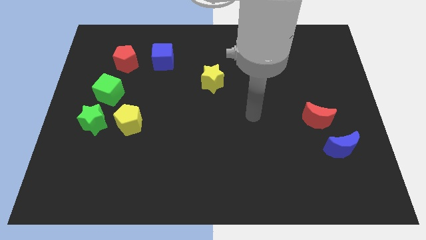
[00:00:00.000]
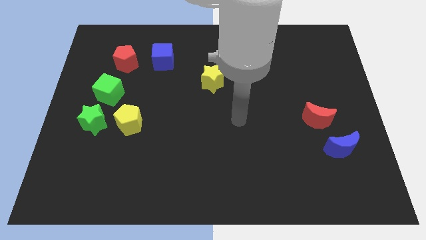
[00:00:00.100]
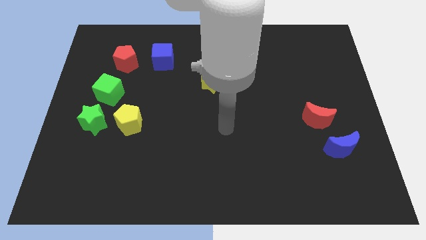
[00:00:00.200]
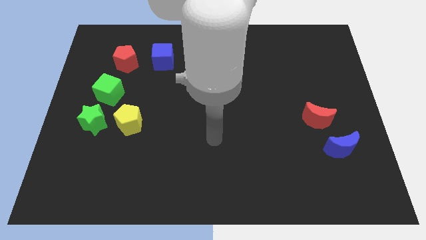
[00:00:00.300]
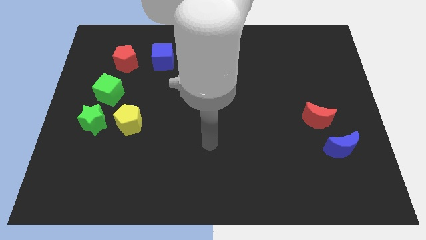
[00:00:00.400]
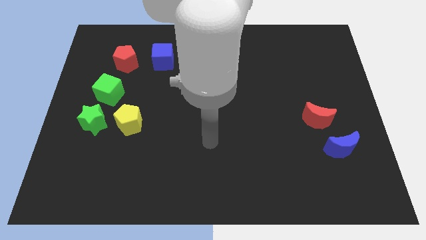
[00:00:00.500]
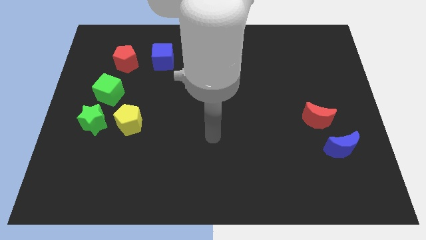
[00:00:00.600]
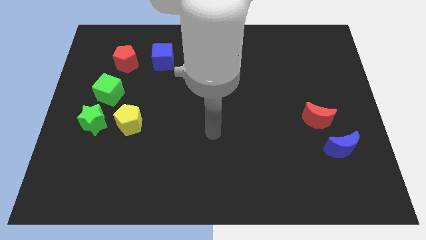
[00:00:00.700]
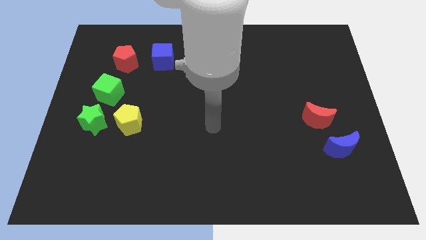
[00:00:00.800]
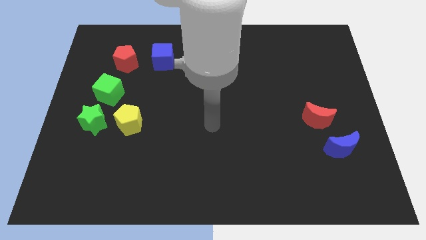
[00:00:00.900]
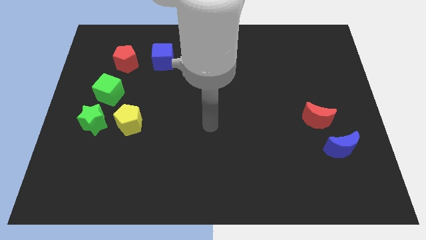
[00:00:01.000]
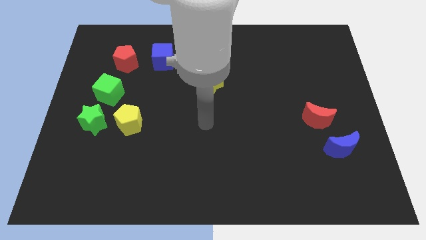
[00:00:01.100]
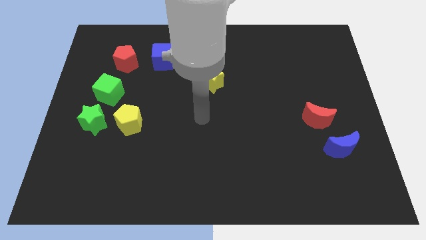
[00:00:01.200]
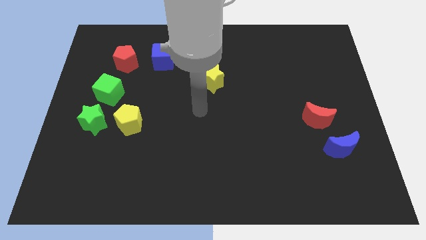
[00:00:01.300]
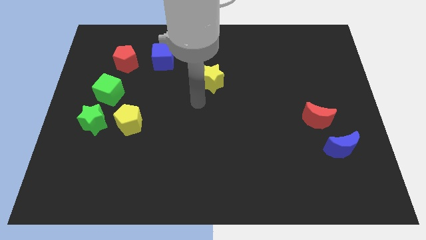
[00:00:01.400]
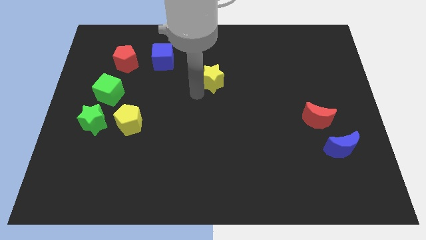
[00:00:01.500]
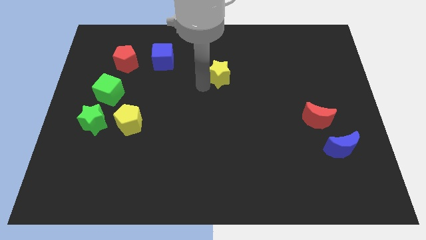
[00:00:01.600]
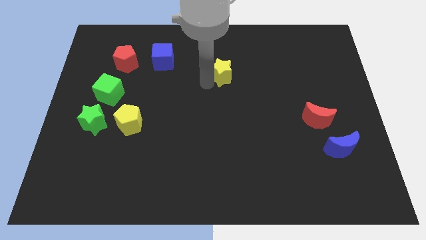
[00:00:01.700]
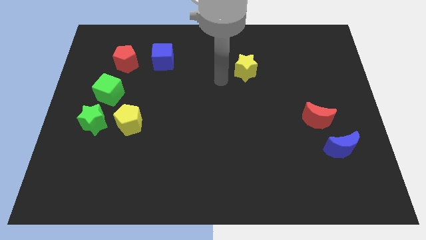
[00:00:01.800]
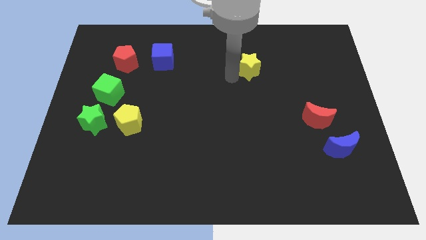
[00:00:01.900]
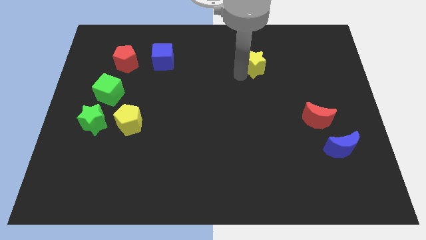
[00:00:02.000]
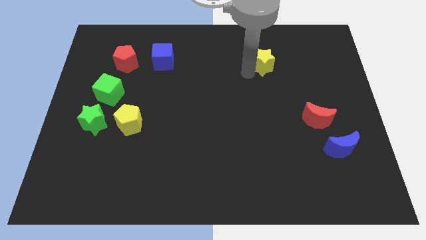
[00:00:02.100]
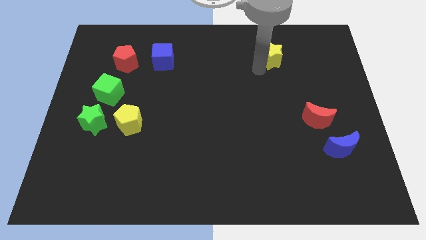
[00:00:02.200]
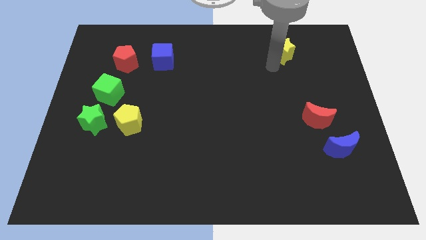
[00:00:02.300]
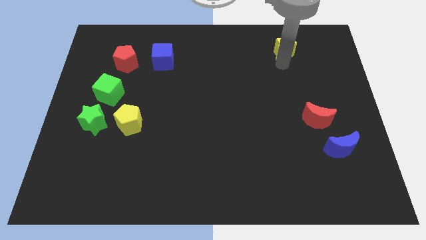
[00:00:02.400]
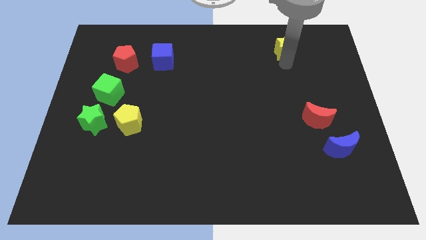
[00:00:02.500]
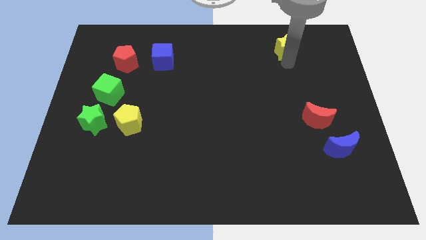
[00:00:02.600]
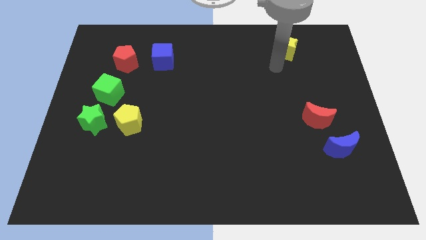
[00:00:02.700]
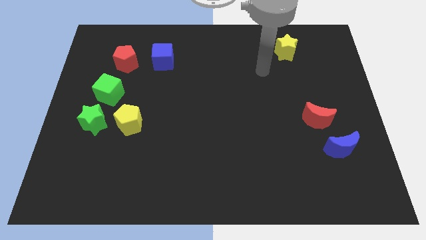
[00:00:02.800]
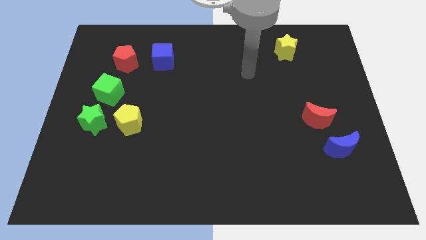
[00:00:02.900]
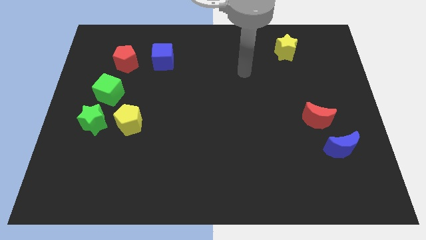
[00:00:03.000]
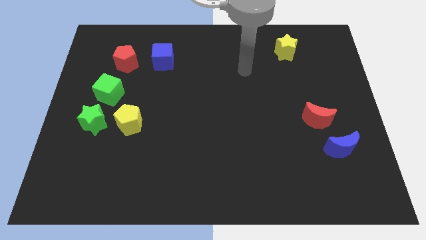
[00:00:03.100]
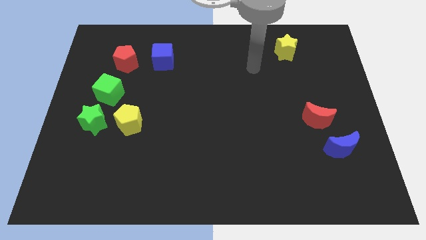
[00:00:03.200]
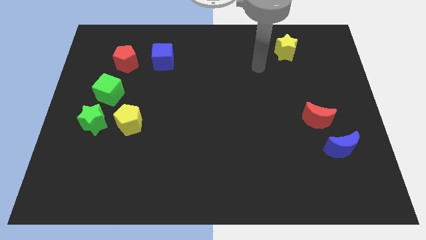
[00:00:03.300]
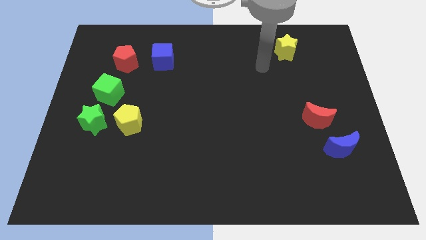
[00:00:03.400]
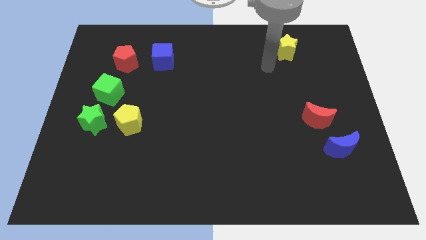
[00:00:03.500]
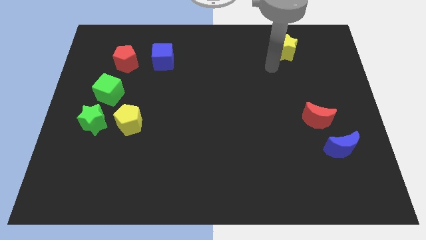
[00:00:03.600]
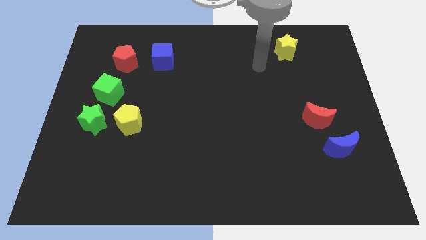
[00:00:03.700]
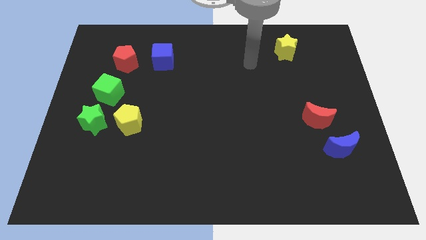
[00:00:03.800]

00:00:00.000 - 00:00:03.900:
push the yellow star towards the top side of the board

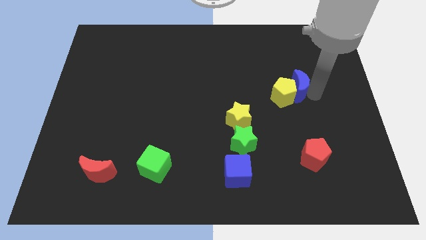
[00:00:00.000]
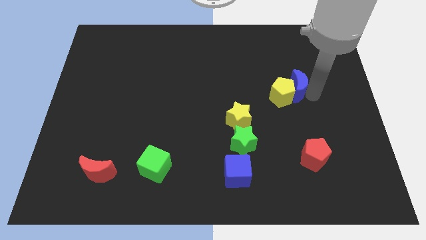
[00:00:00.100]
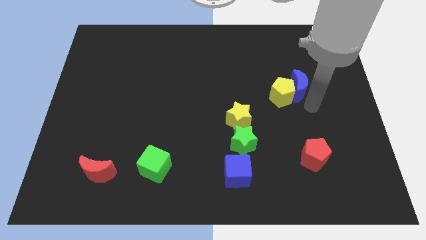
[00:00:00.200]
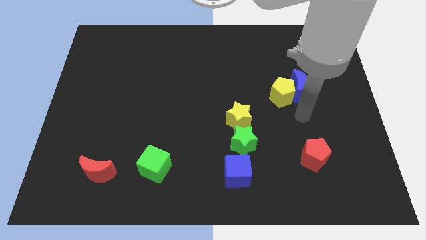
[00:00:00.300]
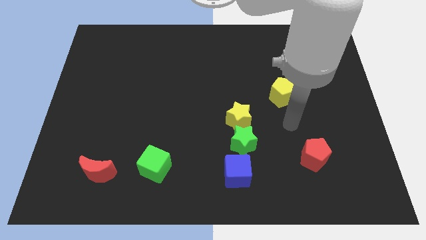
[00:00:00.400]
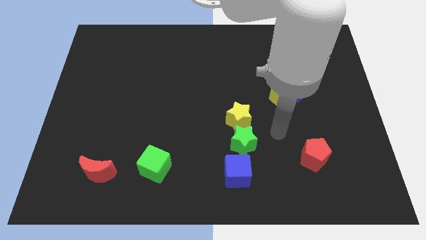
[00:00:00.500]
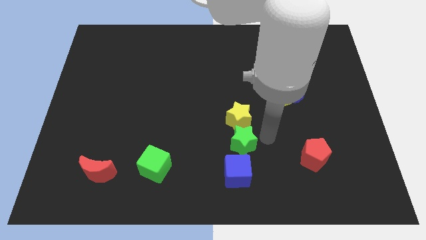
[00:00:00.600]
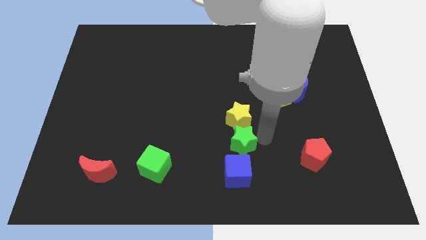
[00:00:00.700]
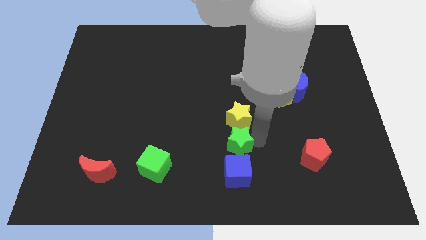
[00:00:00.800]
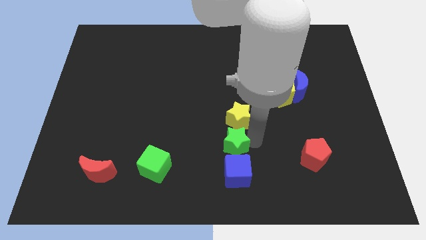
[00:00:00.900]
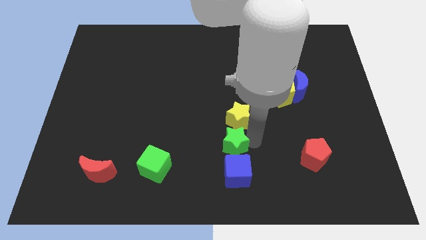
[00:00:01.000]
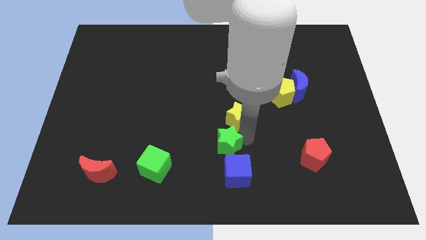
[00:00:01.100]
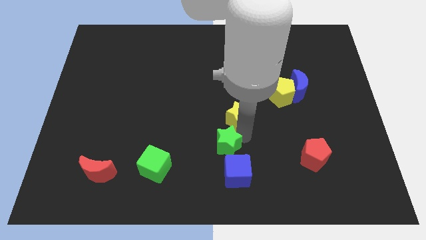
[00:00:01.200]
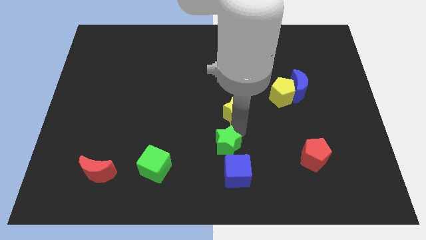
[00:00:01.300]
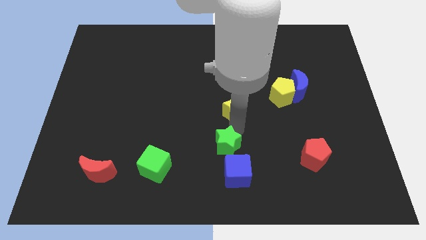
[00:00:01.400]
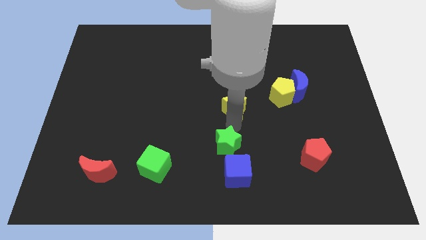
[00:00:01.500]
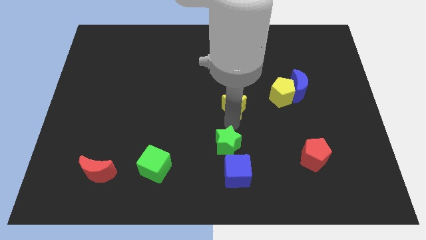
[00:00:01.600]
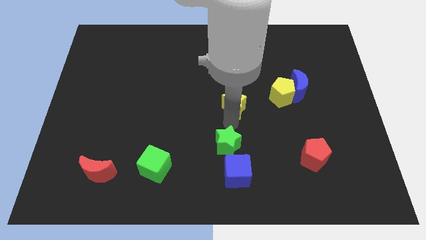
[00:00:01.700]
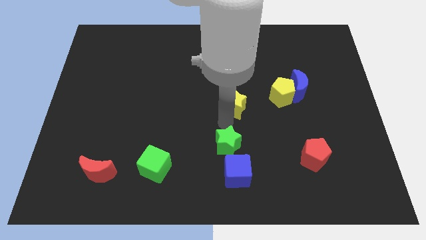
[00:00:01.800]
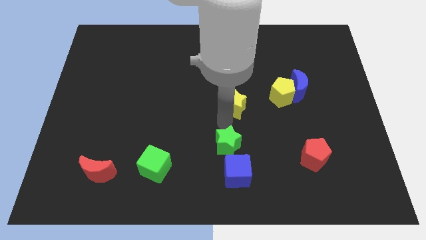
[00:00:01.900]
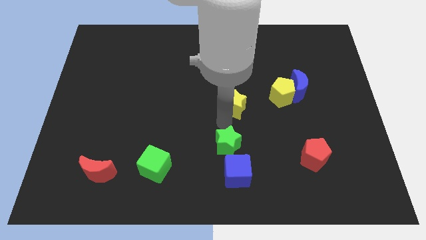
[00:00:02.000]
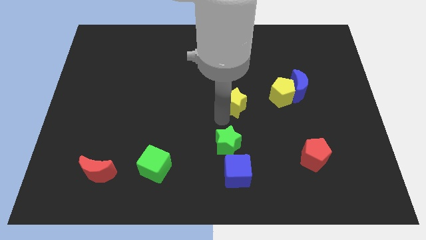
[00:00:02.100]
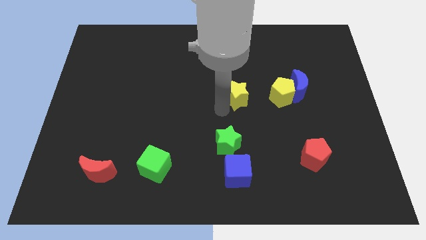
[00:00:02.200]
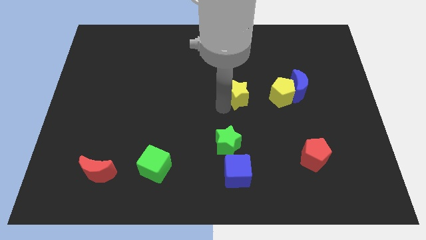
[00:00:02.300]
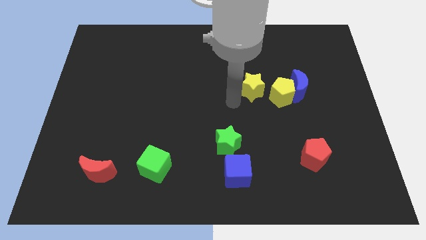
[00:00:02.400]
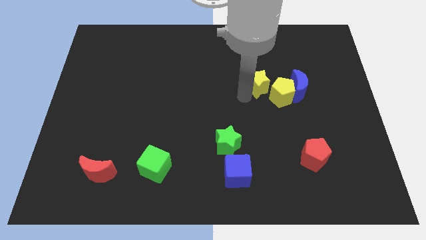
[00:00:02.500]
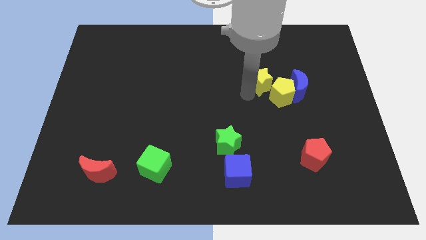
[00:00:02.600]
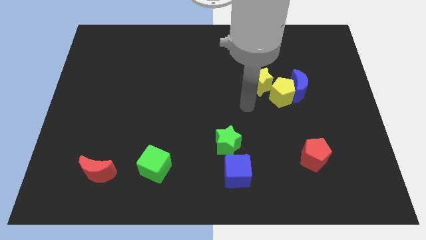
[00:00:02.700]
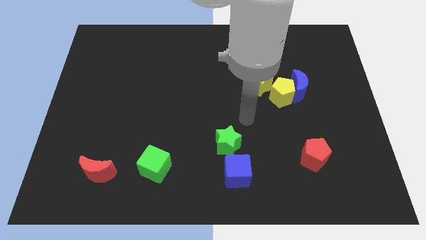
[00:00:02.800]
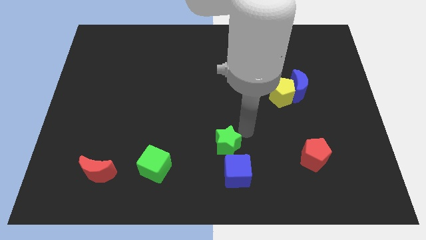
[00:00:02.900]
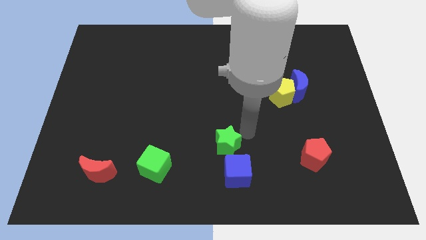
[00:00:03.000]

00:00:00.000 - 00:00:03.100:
place the yellow star near to the left side of the yellow pentagon

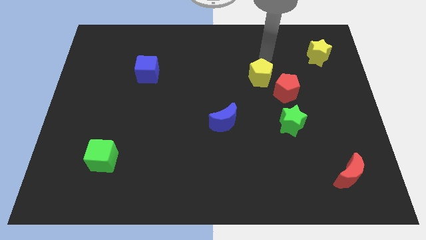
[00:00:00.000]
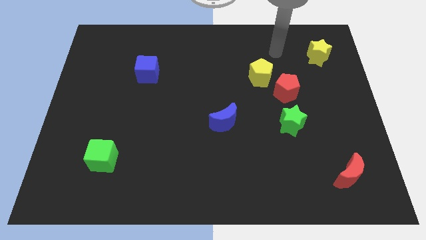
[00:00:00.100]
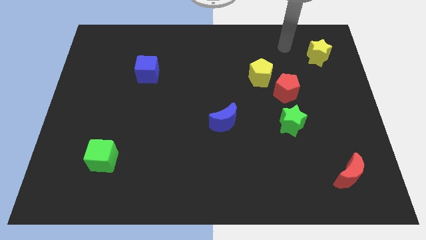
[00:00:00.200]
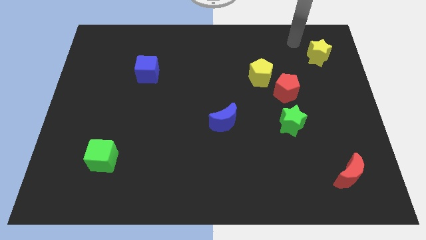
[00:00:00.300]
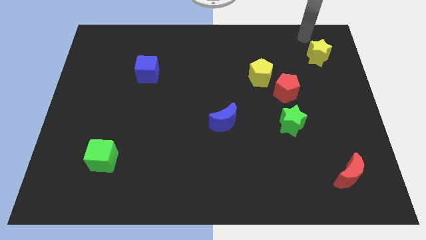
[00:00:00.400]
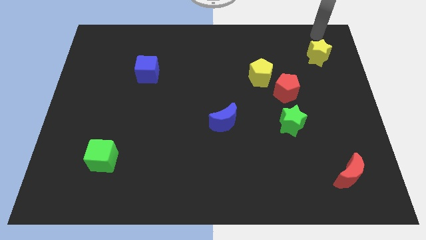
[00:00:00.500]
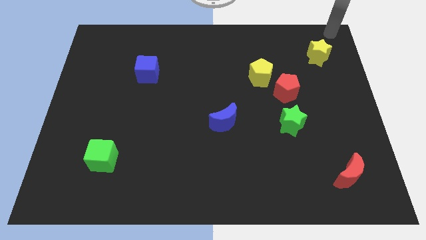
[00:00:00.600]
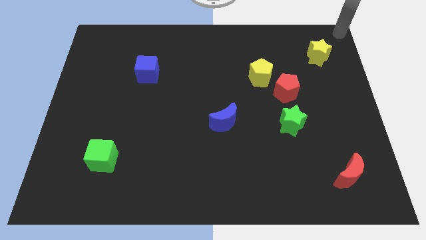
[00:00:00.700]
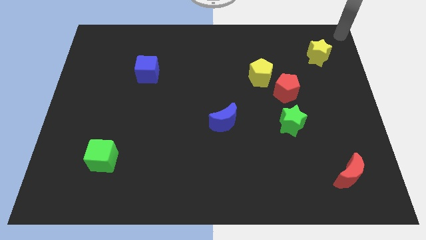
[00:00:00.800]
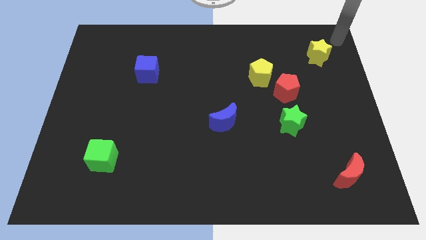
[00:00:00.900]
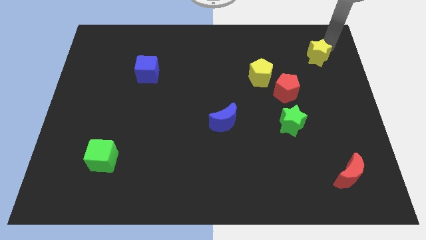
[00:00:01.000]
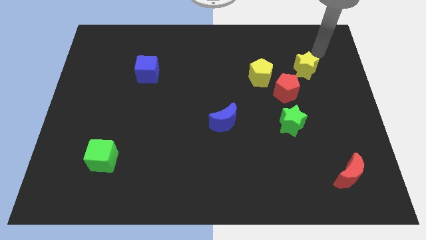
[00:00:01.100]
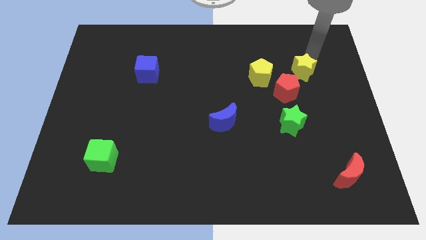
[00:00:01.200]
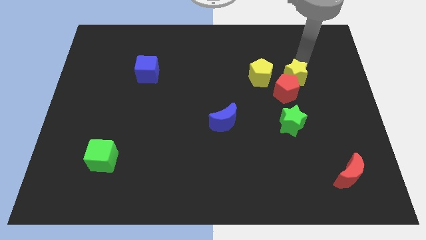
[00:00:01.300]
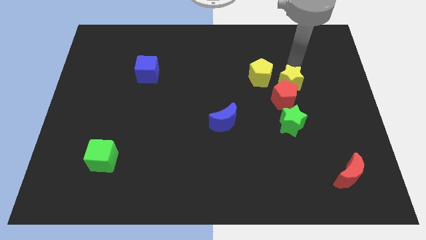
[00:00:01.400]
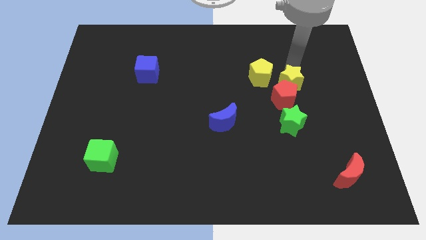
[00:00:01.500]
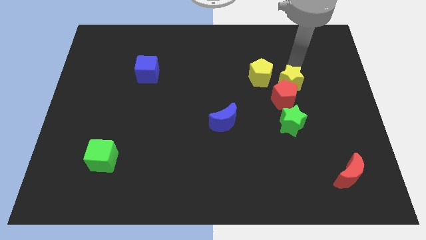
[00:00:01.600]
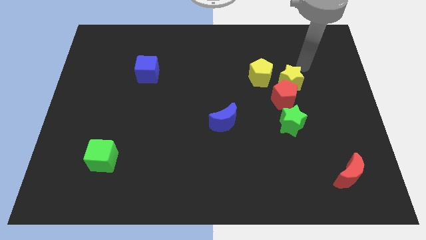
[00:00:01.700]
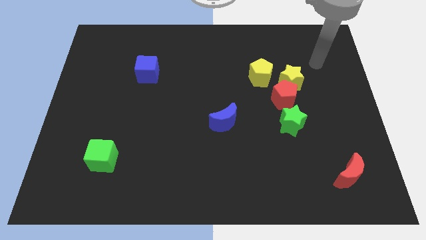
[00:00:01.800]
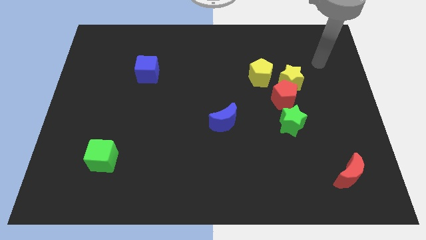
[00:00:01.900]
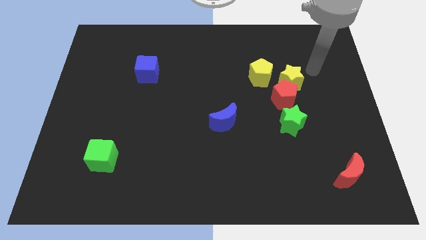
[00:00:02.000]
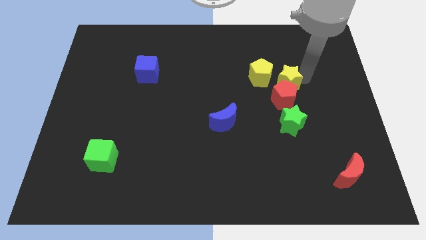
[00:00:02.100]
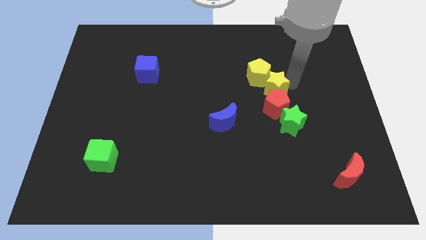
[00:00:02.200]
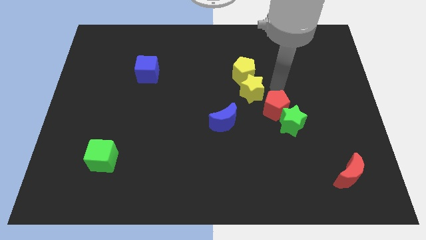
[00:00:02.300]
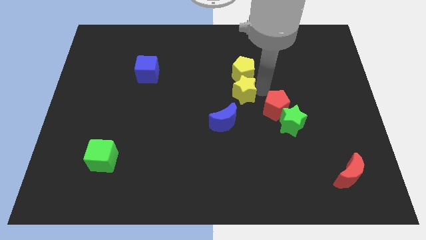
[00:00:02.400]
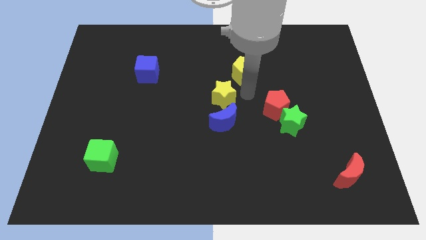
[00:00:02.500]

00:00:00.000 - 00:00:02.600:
move the yellow star above the blue moon
